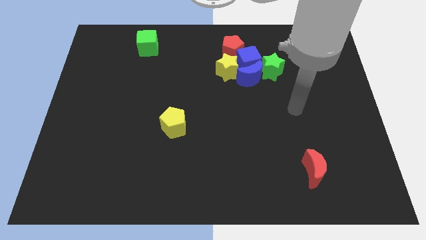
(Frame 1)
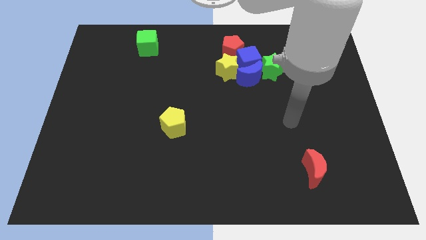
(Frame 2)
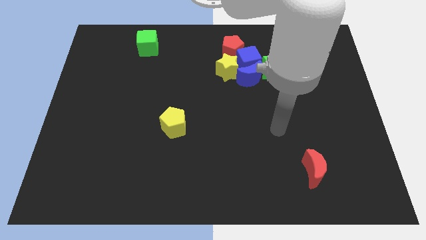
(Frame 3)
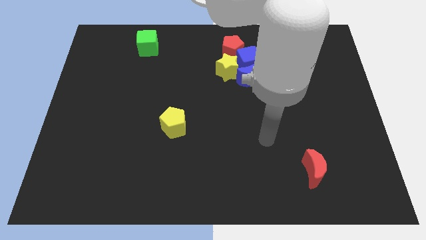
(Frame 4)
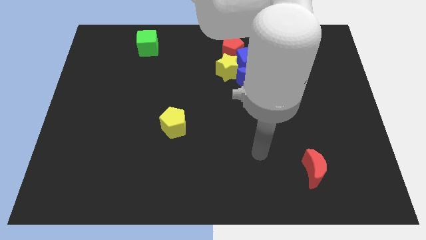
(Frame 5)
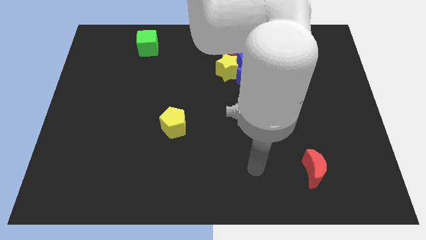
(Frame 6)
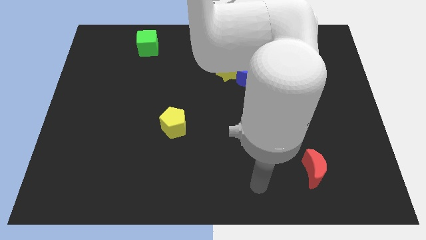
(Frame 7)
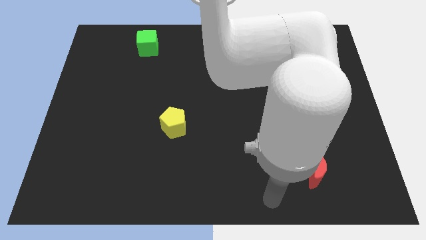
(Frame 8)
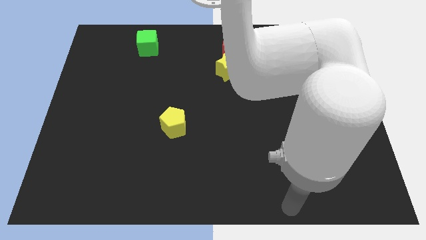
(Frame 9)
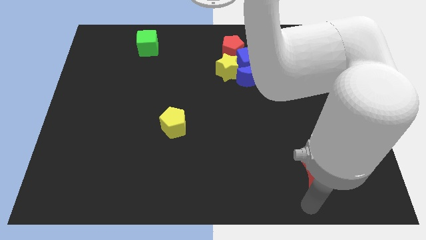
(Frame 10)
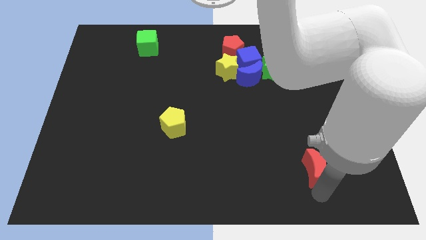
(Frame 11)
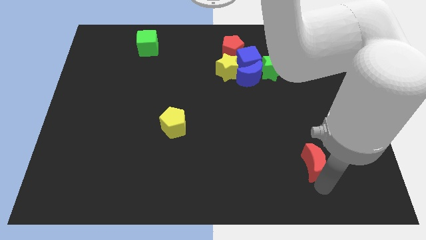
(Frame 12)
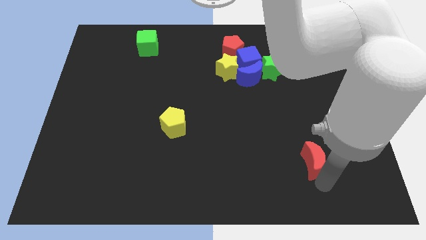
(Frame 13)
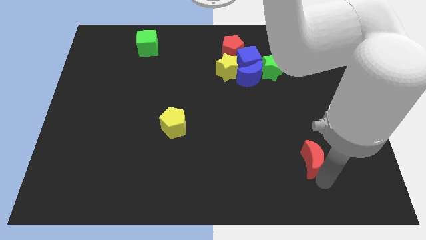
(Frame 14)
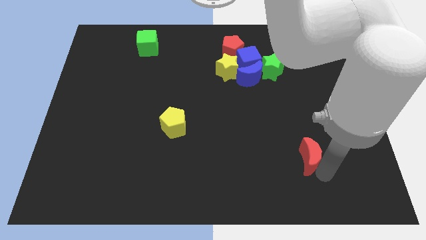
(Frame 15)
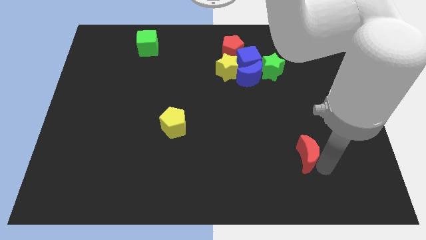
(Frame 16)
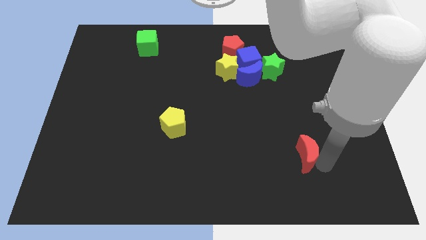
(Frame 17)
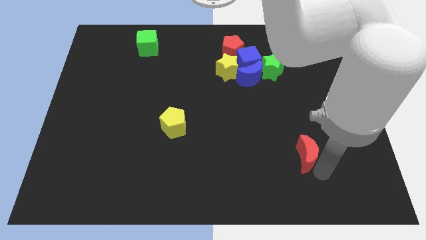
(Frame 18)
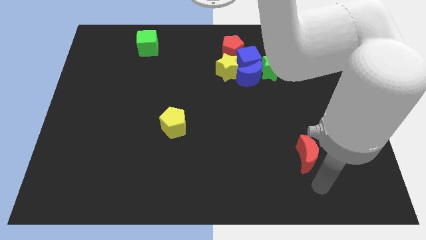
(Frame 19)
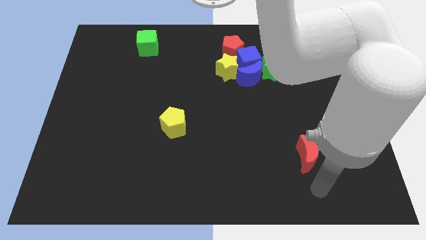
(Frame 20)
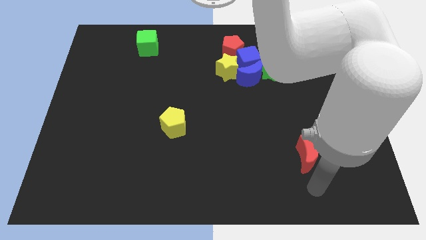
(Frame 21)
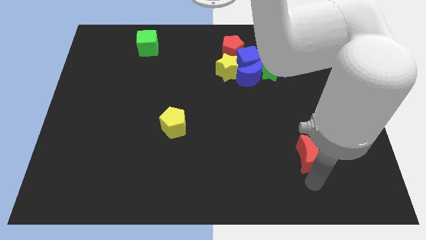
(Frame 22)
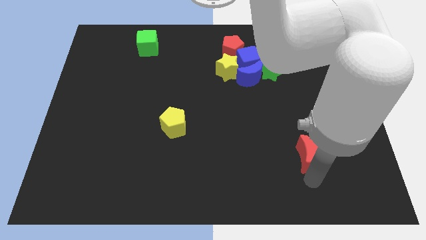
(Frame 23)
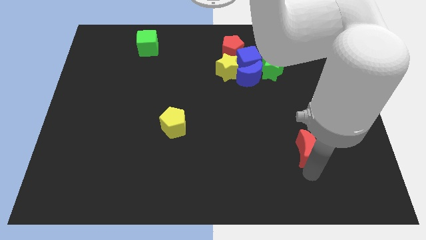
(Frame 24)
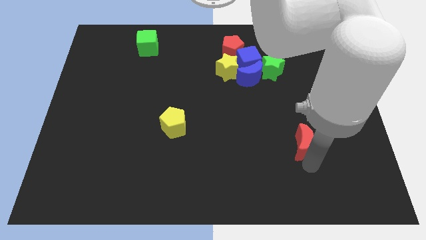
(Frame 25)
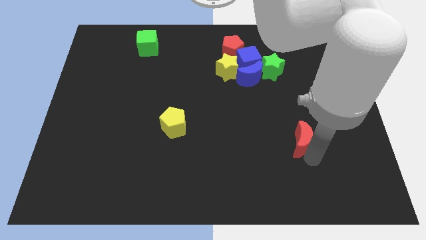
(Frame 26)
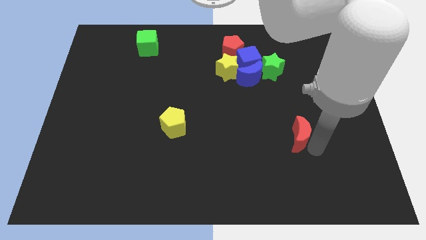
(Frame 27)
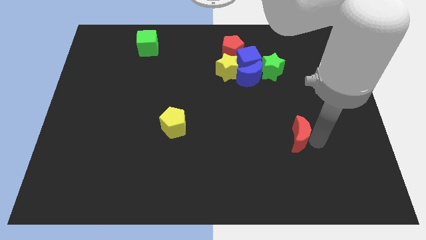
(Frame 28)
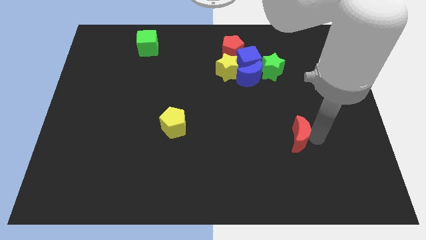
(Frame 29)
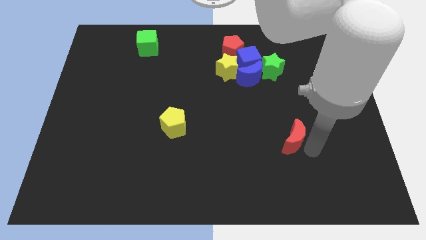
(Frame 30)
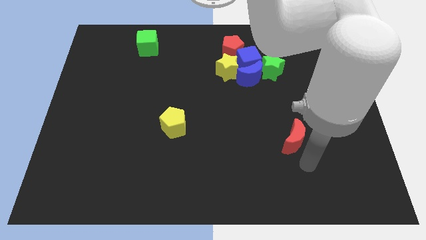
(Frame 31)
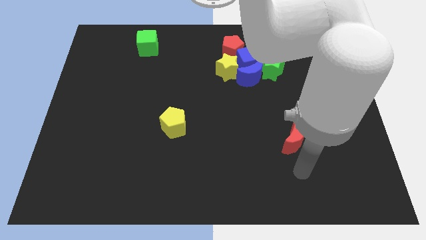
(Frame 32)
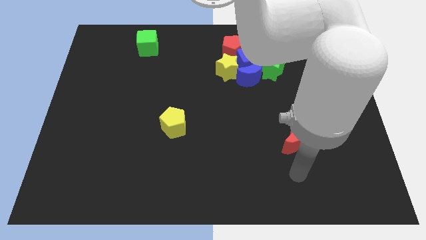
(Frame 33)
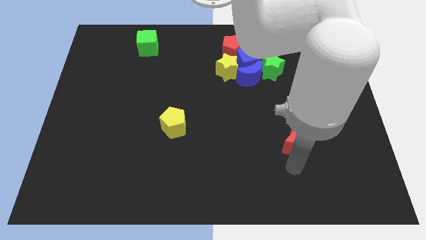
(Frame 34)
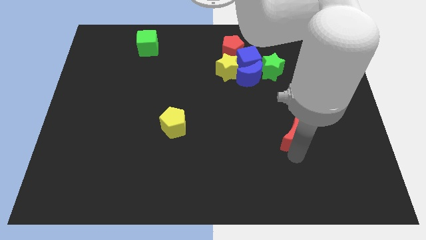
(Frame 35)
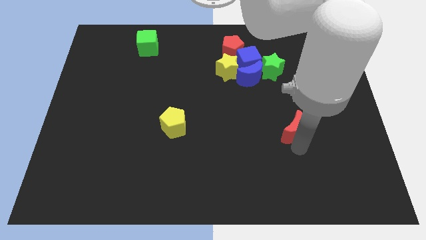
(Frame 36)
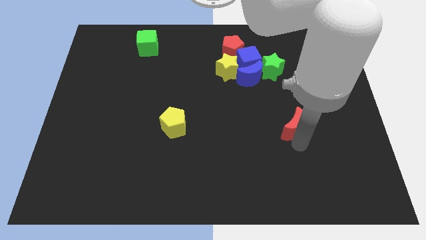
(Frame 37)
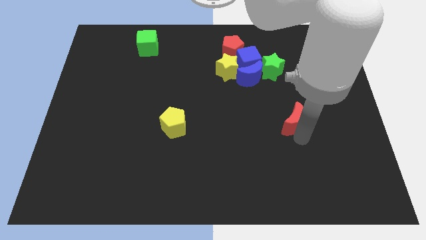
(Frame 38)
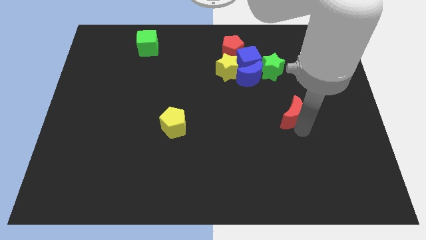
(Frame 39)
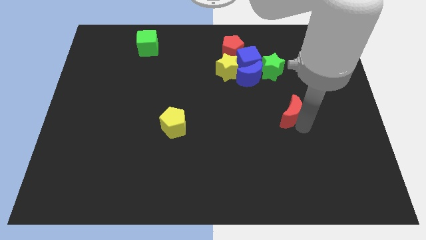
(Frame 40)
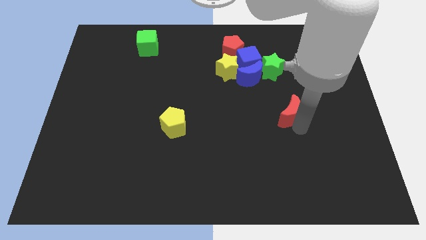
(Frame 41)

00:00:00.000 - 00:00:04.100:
move red moon below green star

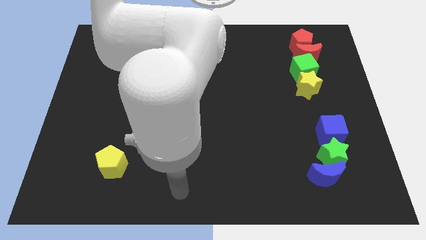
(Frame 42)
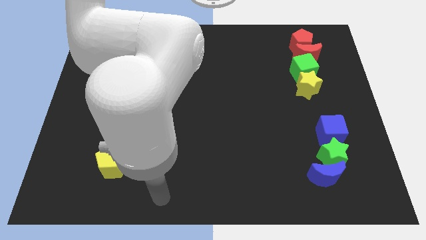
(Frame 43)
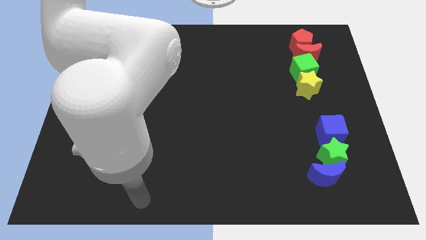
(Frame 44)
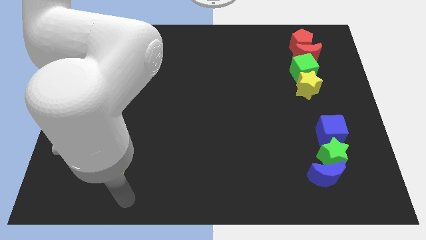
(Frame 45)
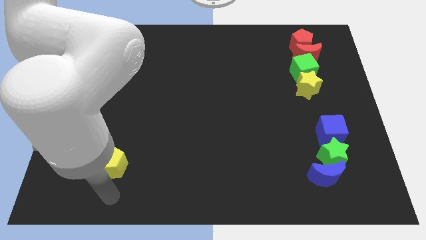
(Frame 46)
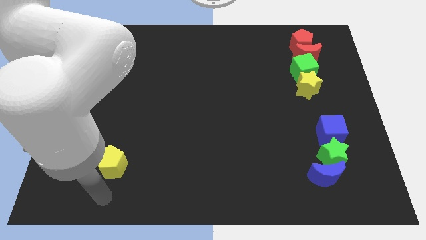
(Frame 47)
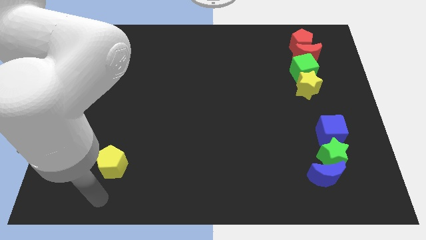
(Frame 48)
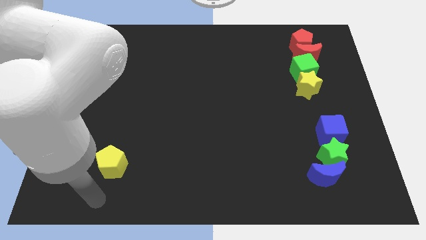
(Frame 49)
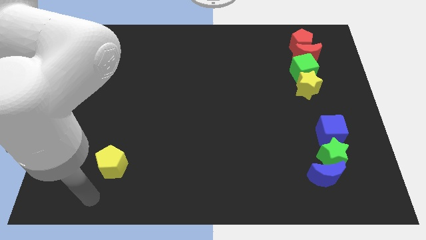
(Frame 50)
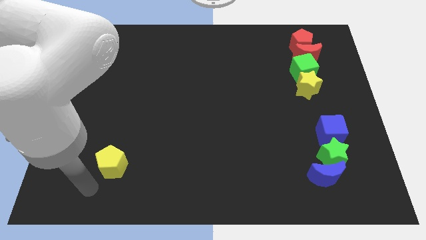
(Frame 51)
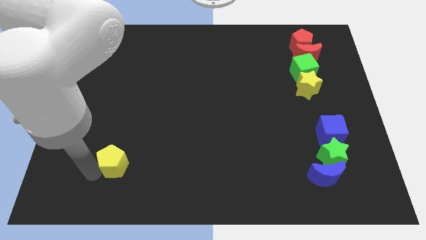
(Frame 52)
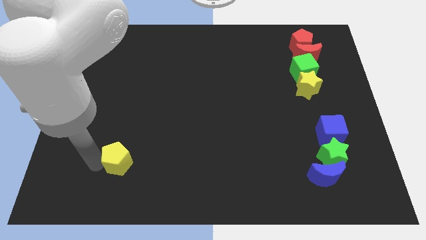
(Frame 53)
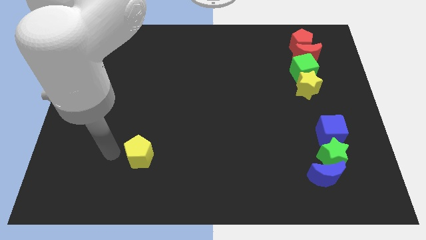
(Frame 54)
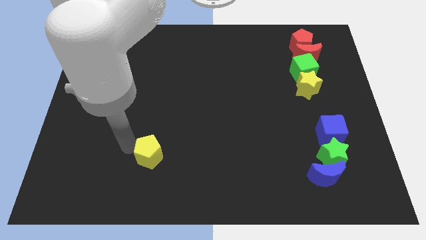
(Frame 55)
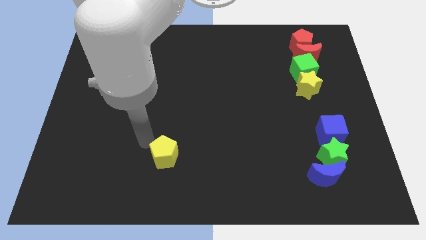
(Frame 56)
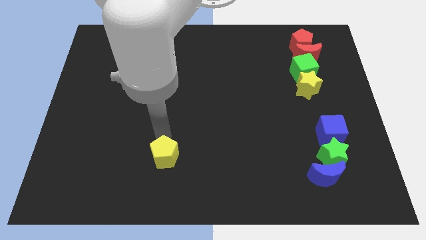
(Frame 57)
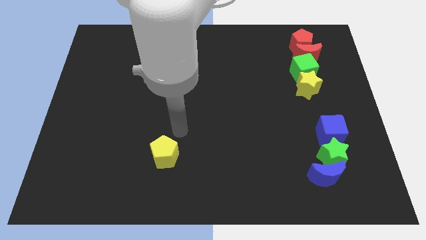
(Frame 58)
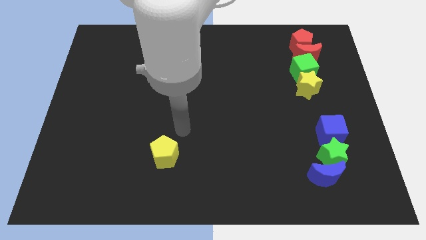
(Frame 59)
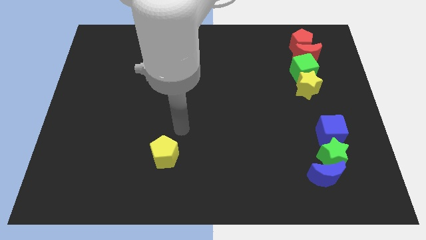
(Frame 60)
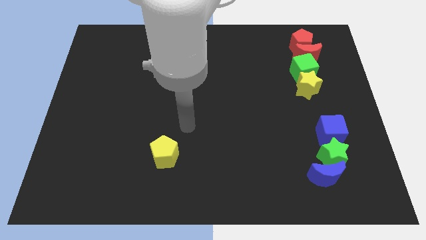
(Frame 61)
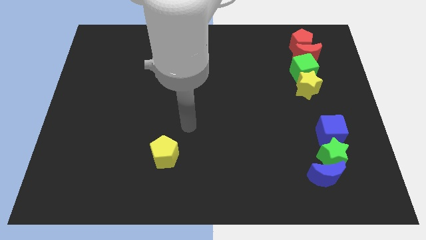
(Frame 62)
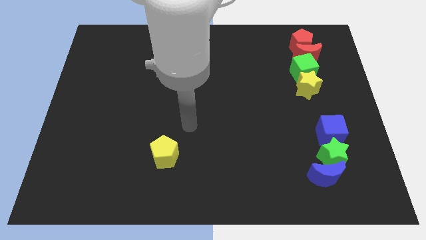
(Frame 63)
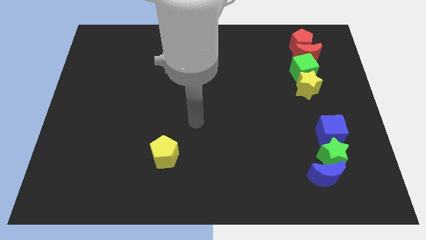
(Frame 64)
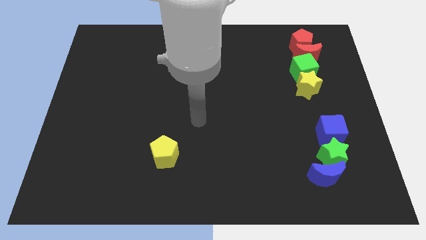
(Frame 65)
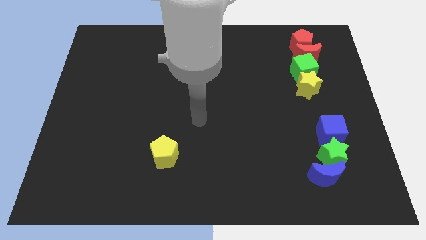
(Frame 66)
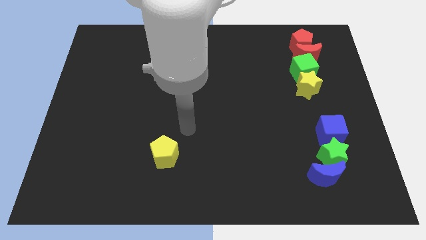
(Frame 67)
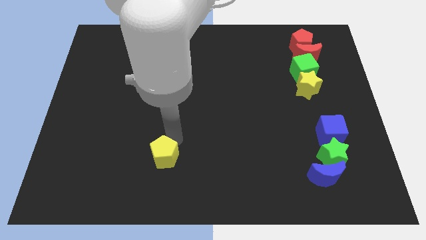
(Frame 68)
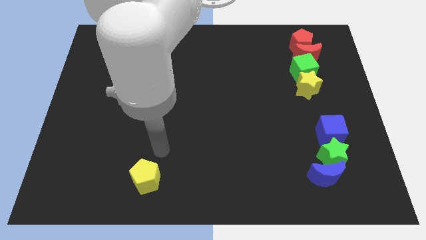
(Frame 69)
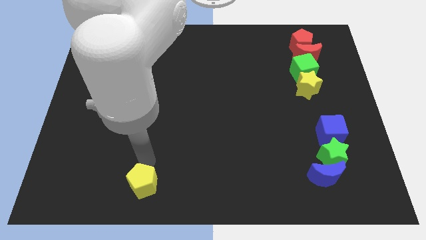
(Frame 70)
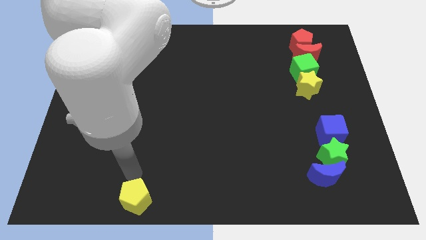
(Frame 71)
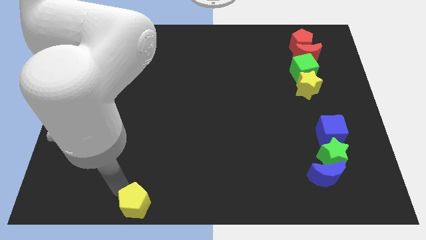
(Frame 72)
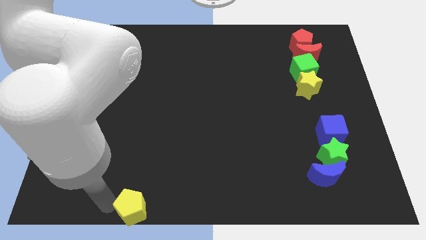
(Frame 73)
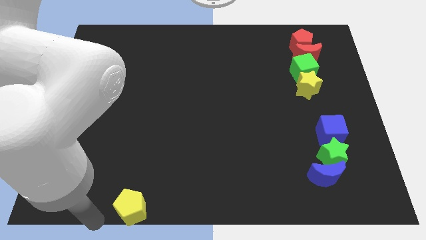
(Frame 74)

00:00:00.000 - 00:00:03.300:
push the yellow pentagon to the bottom center left of the board

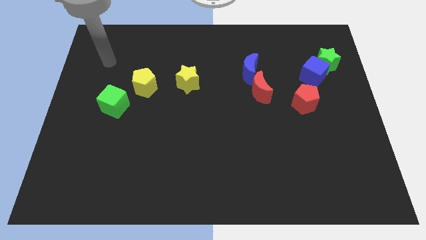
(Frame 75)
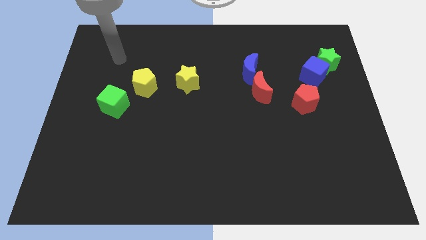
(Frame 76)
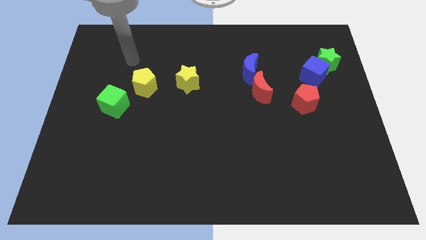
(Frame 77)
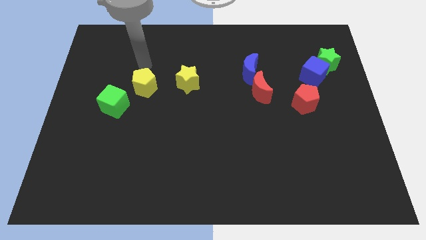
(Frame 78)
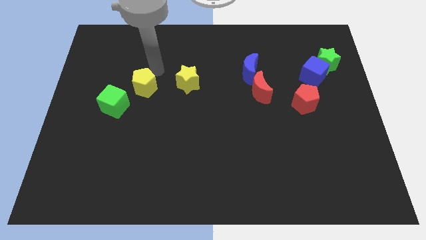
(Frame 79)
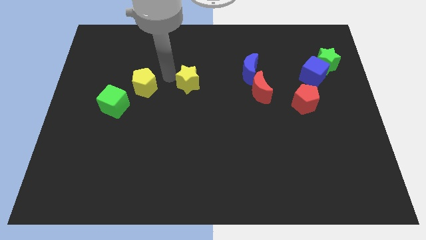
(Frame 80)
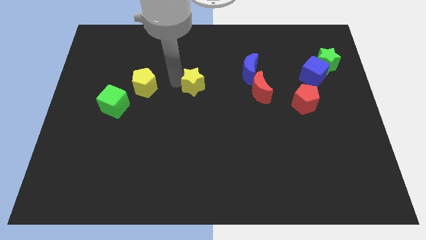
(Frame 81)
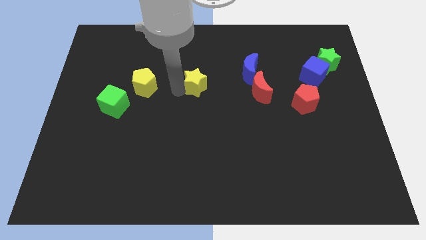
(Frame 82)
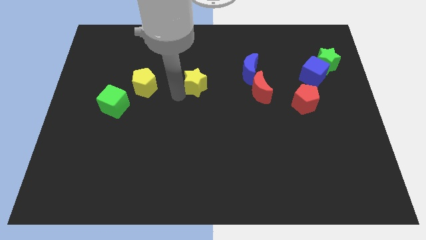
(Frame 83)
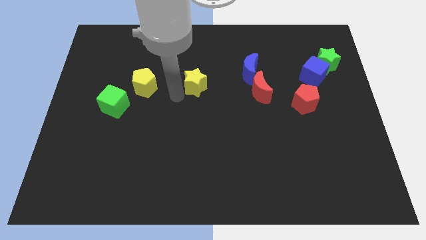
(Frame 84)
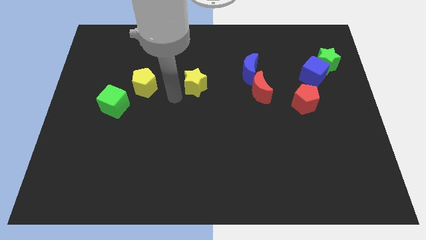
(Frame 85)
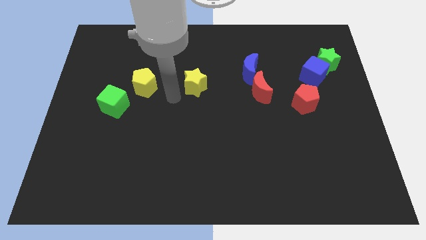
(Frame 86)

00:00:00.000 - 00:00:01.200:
touch the yellow star

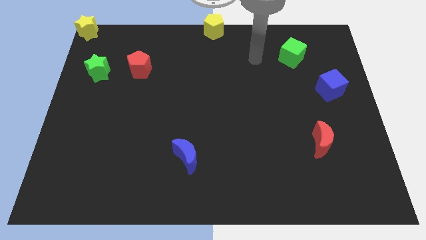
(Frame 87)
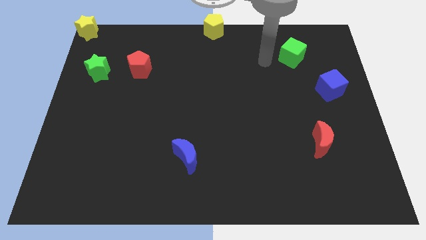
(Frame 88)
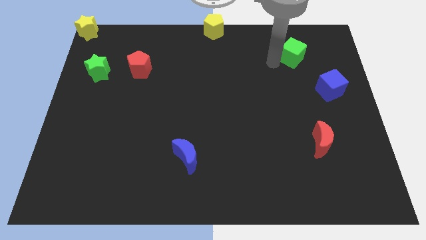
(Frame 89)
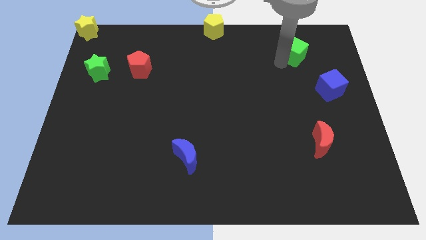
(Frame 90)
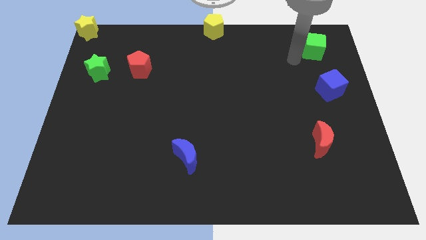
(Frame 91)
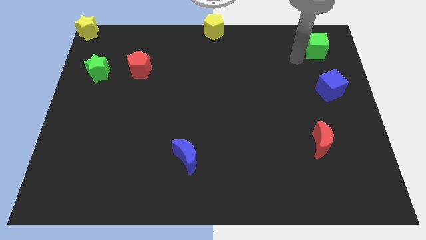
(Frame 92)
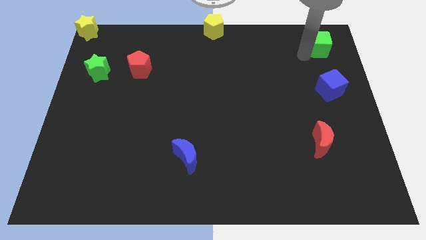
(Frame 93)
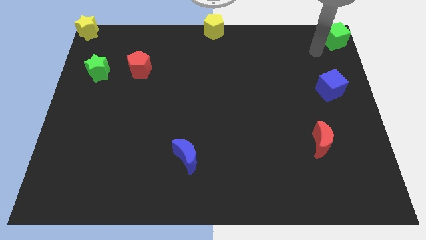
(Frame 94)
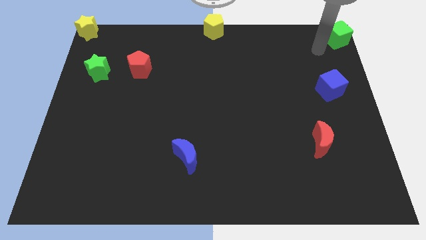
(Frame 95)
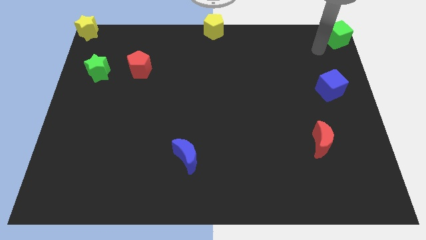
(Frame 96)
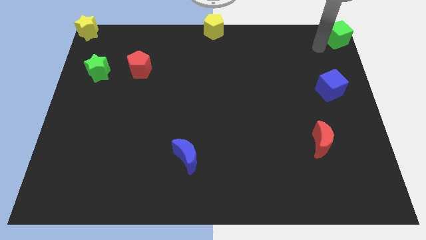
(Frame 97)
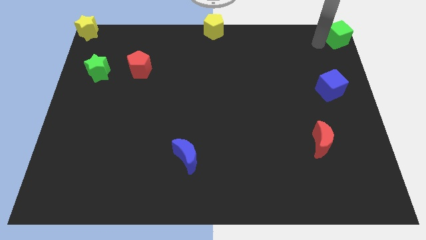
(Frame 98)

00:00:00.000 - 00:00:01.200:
move green cube to the top right corner
